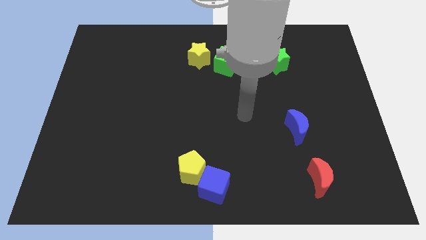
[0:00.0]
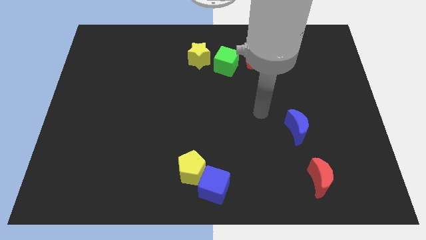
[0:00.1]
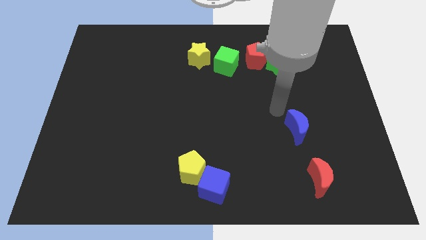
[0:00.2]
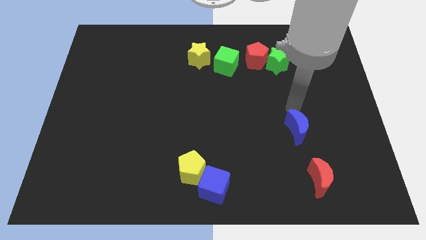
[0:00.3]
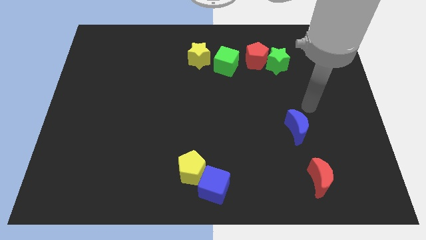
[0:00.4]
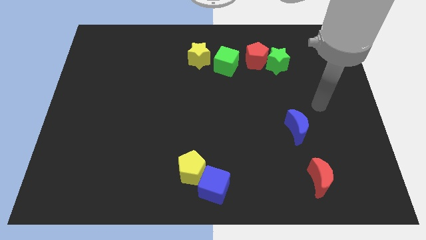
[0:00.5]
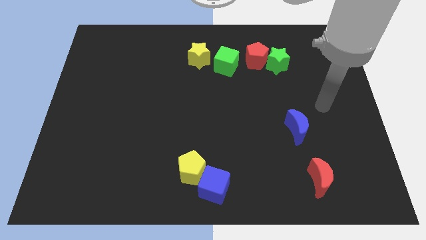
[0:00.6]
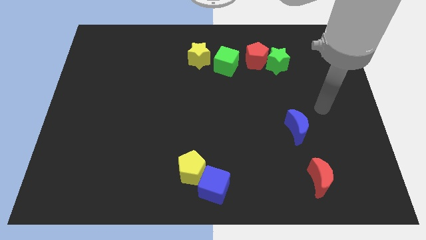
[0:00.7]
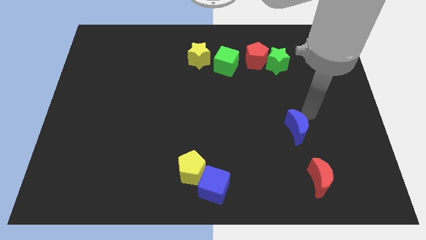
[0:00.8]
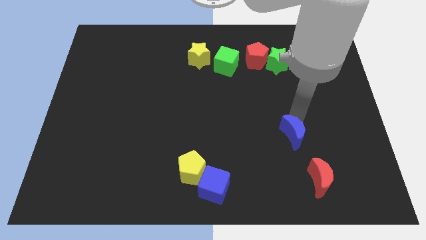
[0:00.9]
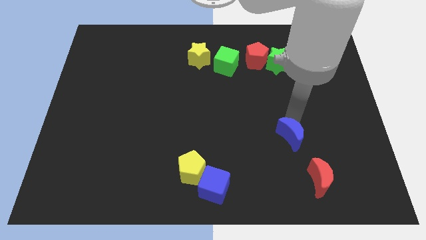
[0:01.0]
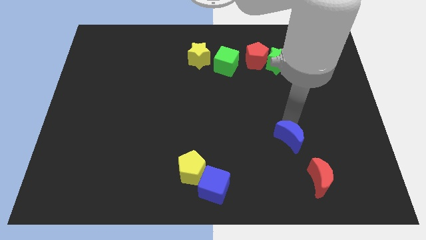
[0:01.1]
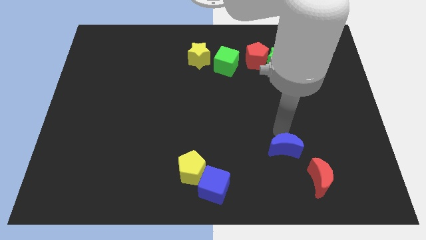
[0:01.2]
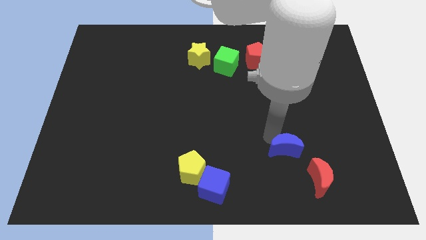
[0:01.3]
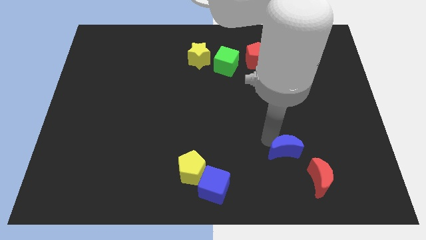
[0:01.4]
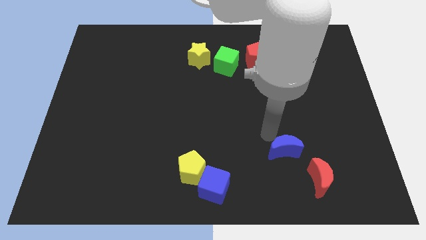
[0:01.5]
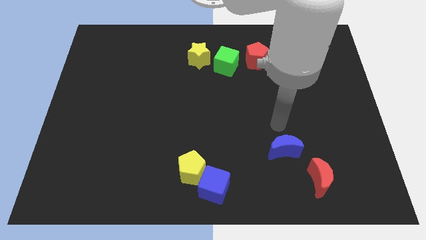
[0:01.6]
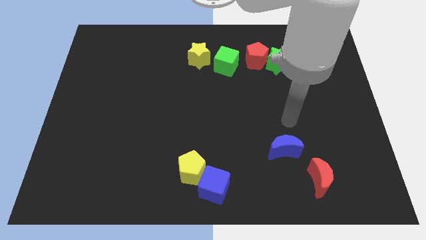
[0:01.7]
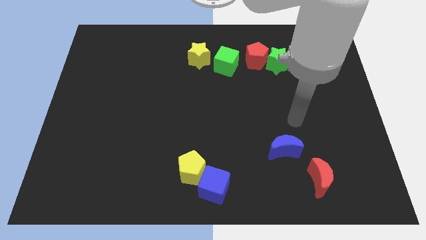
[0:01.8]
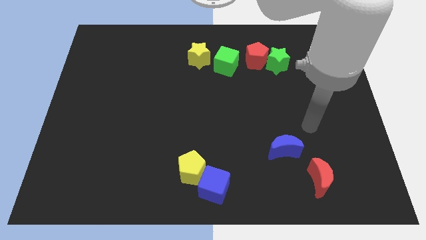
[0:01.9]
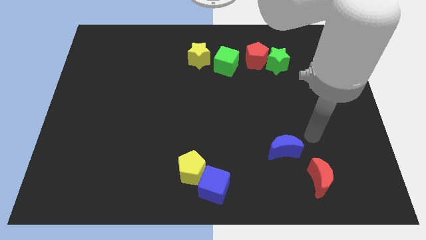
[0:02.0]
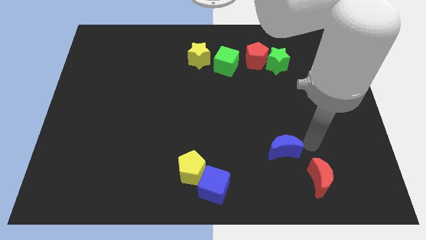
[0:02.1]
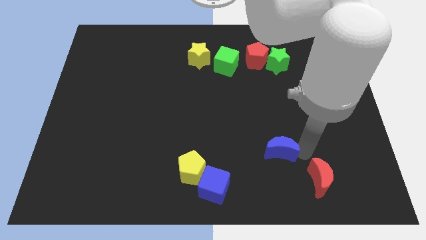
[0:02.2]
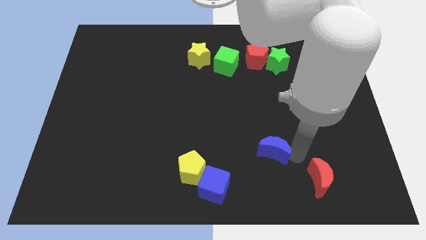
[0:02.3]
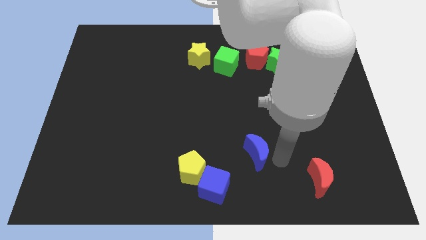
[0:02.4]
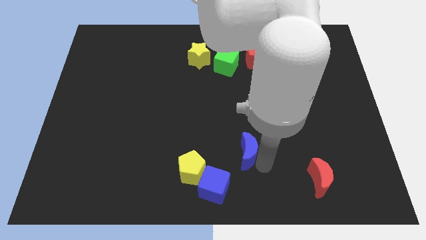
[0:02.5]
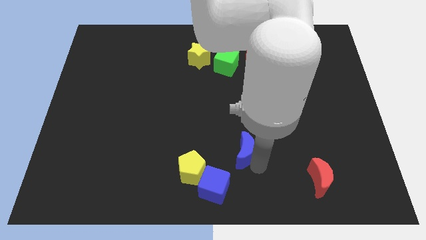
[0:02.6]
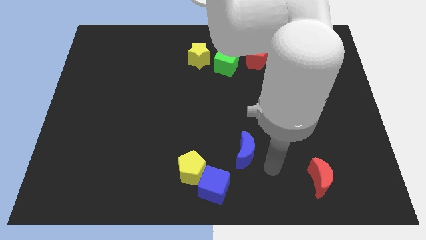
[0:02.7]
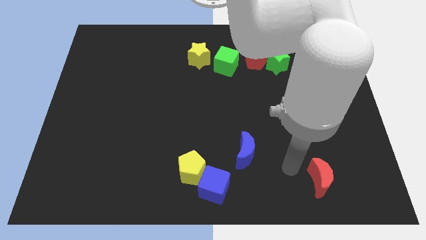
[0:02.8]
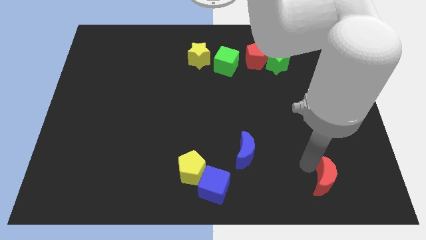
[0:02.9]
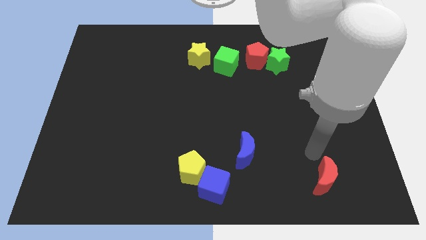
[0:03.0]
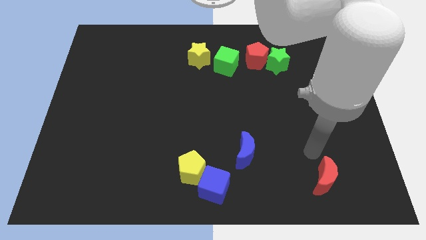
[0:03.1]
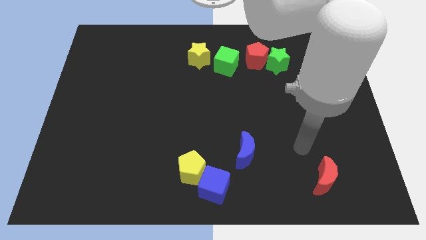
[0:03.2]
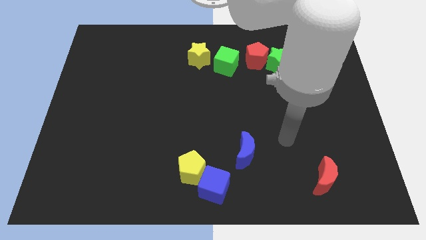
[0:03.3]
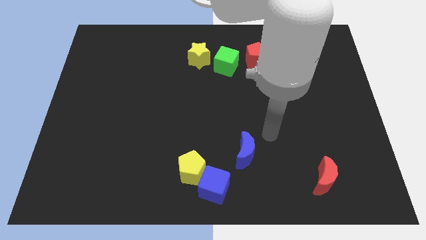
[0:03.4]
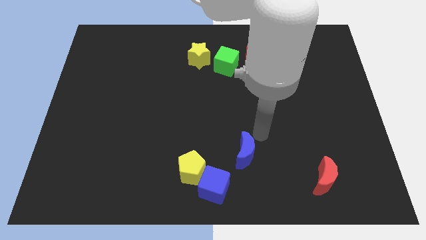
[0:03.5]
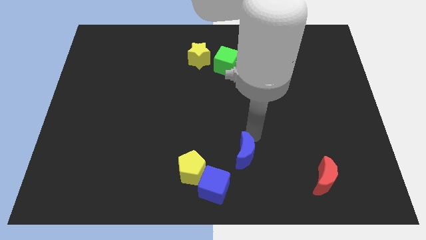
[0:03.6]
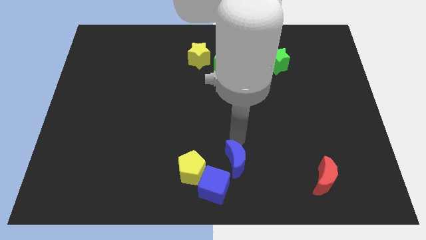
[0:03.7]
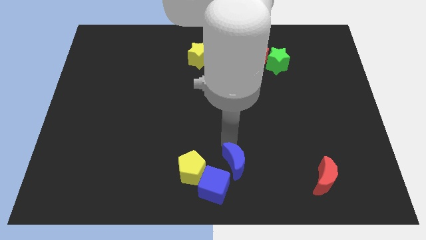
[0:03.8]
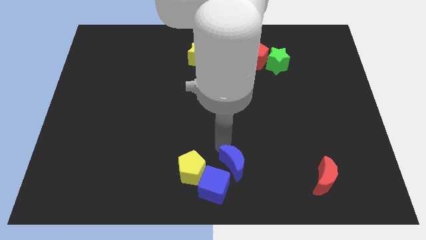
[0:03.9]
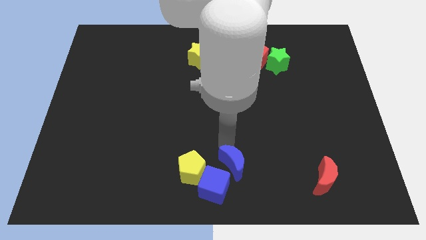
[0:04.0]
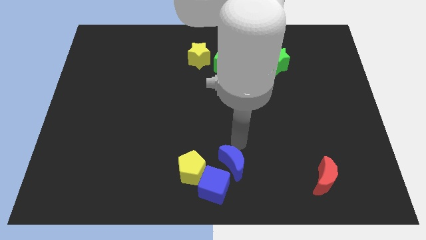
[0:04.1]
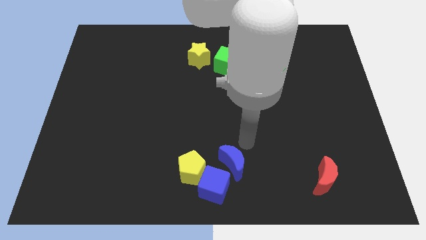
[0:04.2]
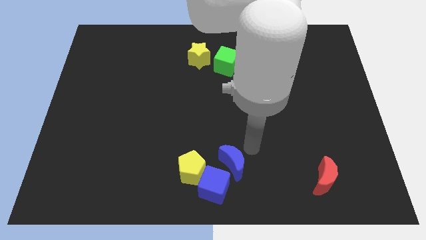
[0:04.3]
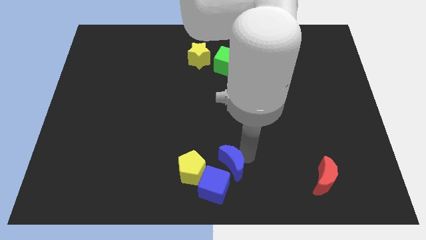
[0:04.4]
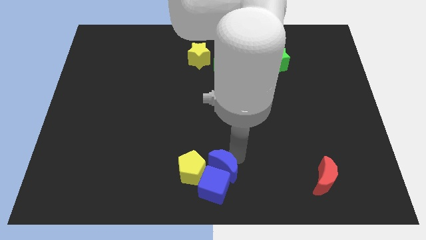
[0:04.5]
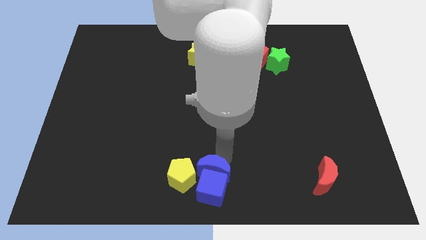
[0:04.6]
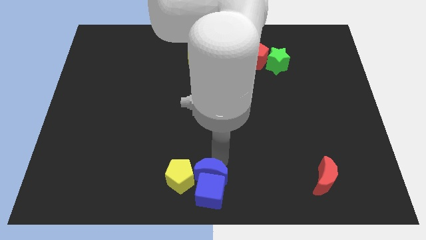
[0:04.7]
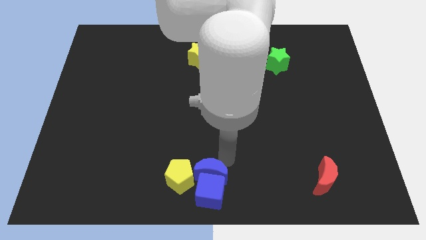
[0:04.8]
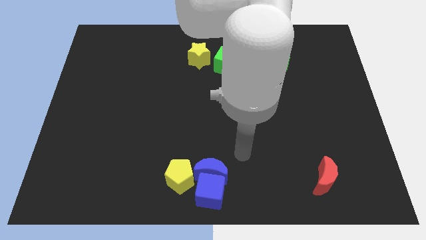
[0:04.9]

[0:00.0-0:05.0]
push the blue crescent into the blue cube

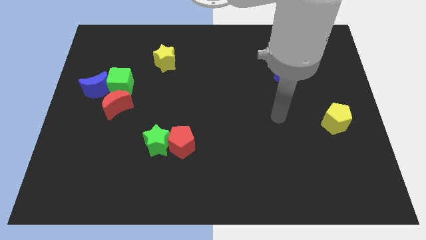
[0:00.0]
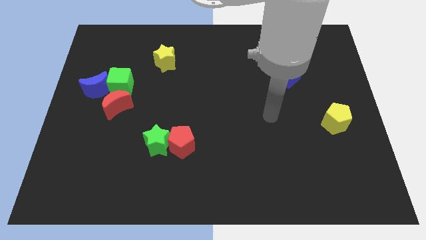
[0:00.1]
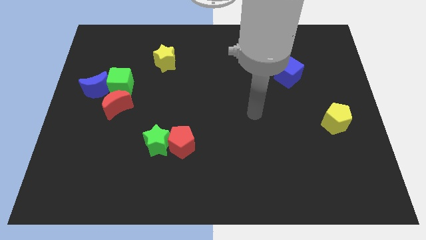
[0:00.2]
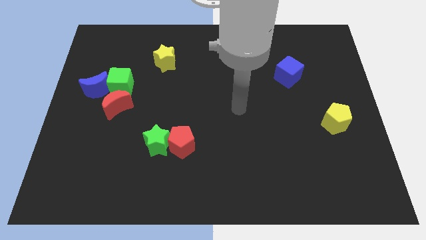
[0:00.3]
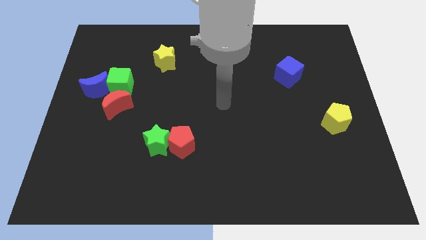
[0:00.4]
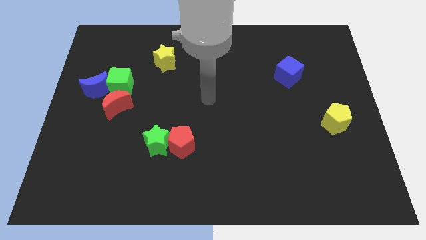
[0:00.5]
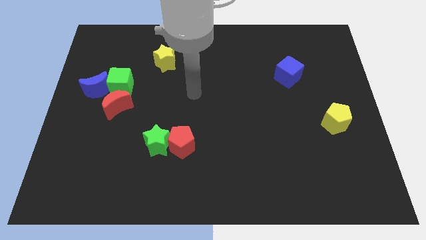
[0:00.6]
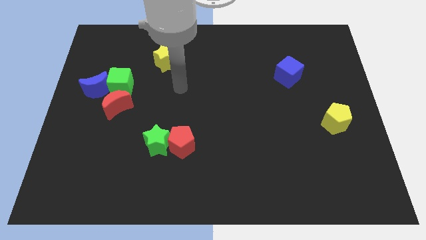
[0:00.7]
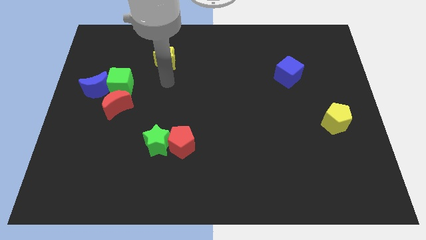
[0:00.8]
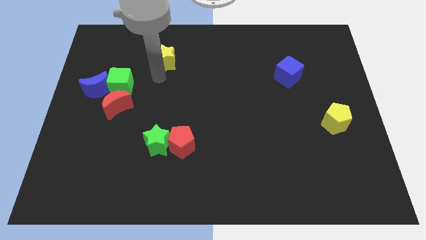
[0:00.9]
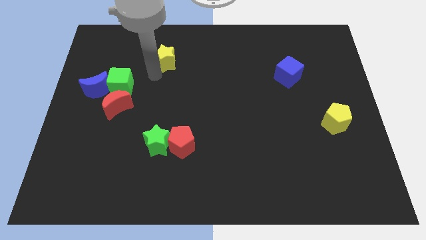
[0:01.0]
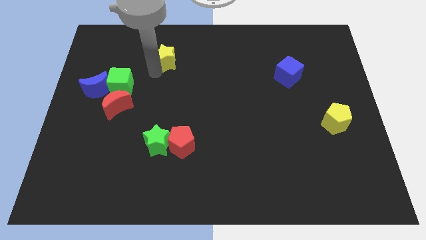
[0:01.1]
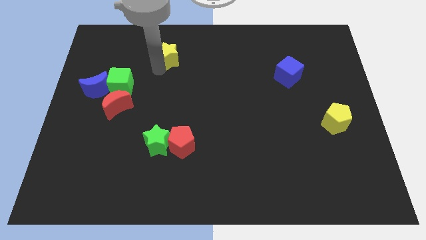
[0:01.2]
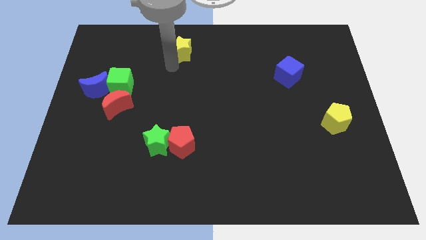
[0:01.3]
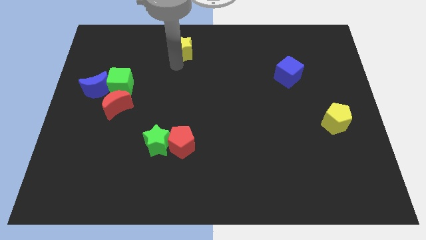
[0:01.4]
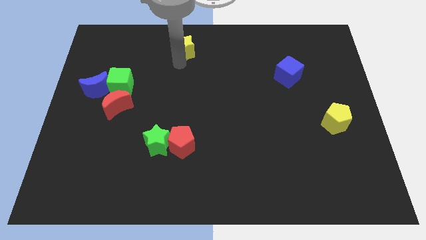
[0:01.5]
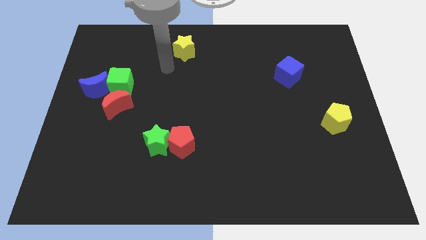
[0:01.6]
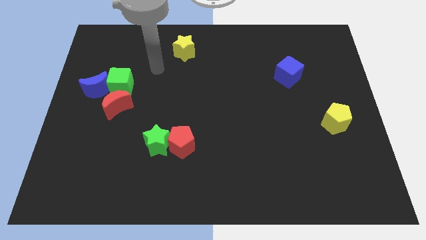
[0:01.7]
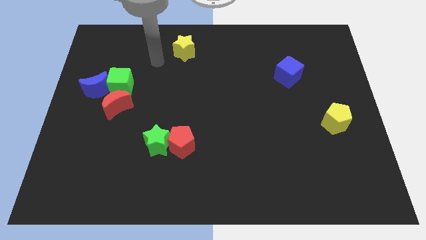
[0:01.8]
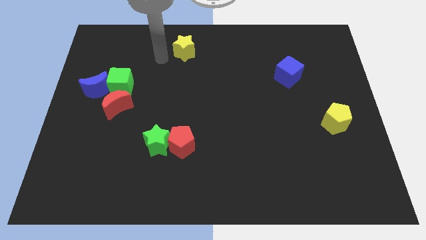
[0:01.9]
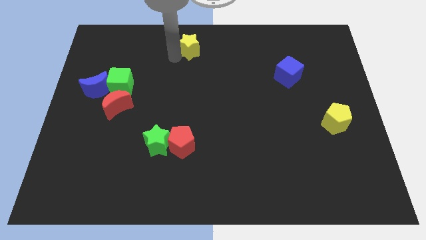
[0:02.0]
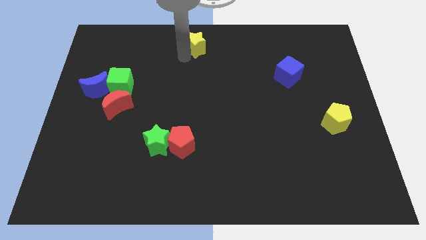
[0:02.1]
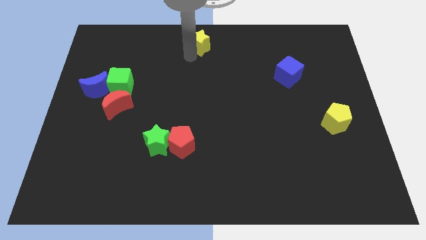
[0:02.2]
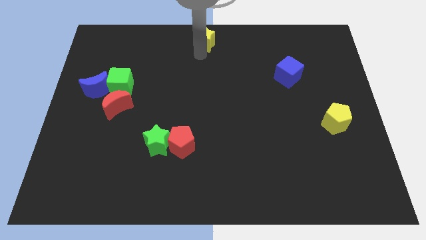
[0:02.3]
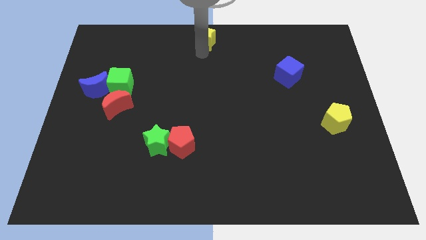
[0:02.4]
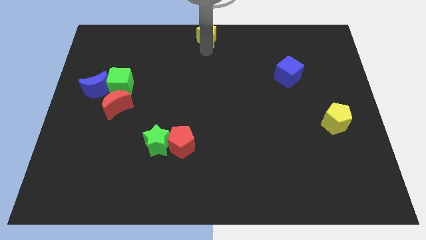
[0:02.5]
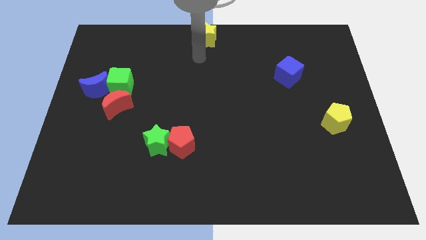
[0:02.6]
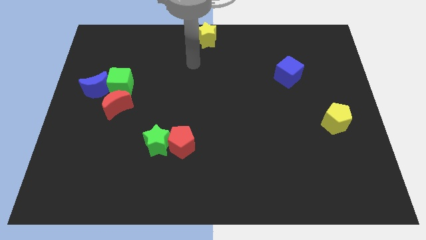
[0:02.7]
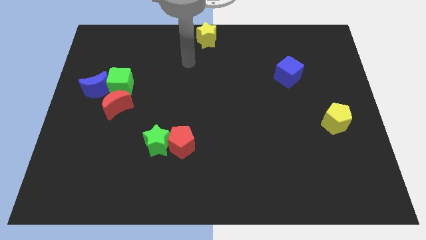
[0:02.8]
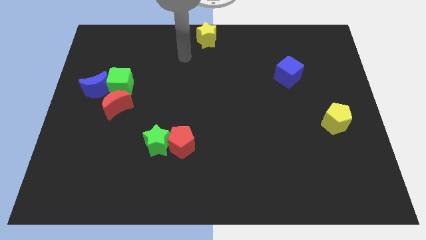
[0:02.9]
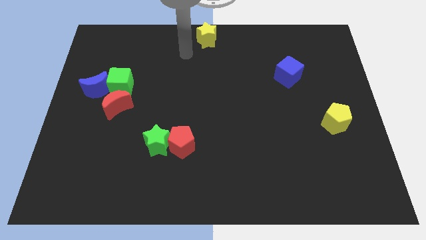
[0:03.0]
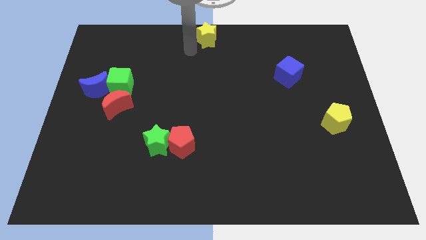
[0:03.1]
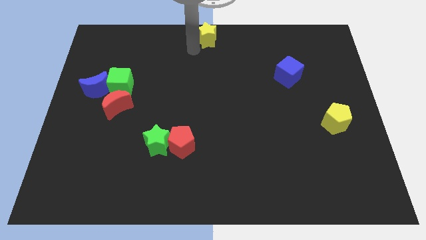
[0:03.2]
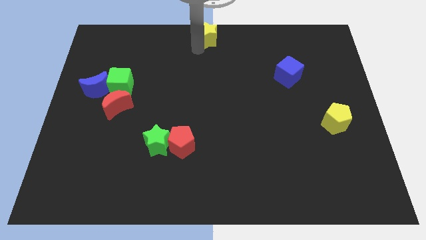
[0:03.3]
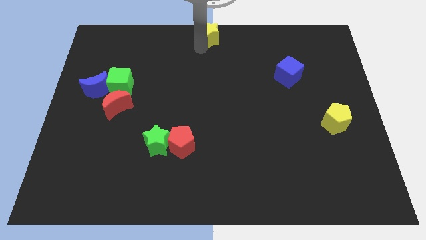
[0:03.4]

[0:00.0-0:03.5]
move yellow star to the top center of the board

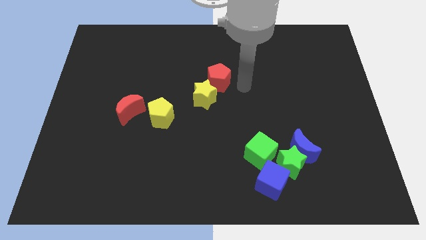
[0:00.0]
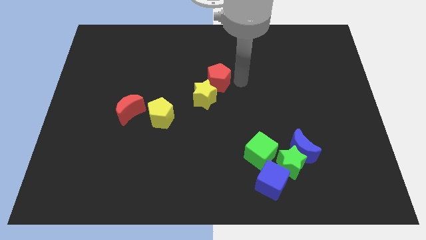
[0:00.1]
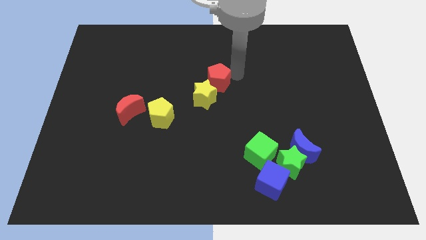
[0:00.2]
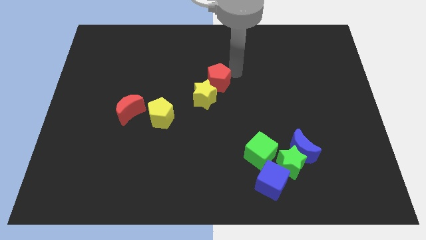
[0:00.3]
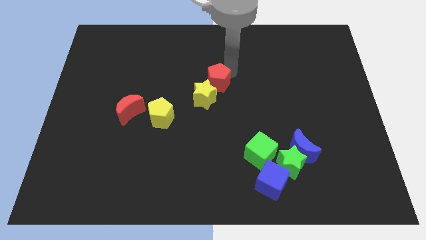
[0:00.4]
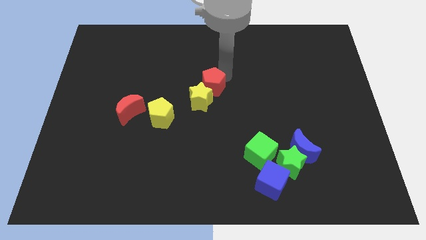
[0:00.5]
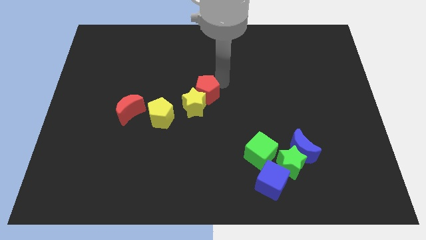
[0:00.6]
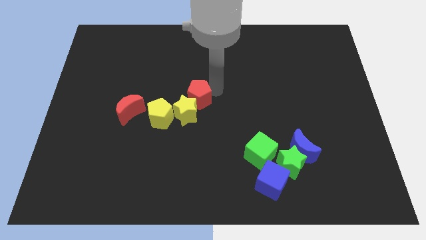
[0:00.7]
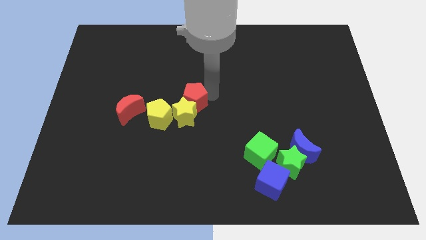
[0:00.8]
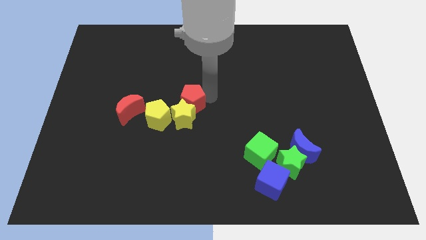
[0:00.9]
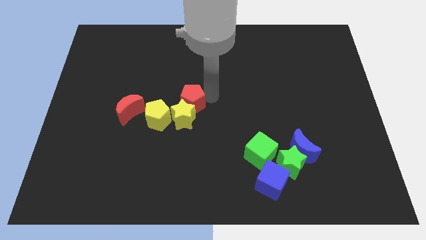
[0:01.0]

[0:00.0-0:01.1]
push the red pentagon towards the center of the board
